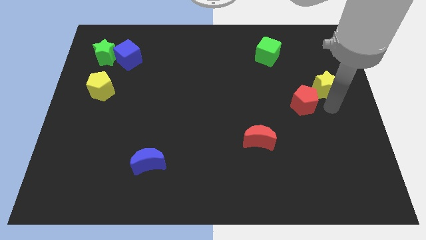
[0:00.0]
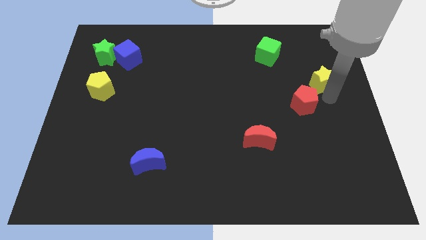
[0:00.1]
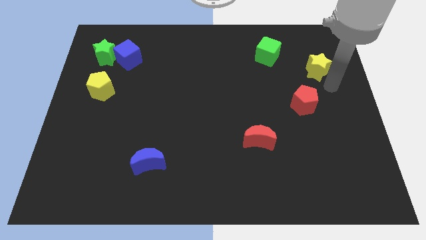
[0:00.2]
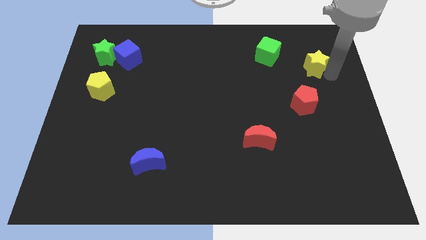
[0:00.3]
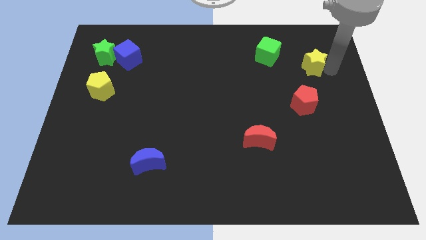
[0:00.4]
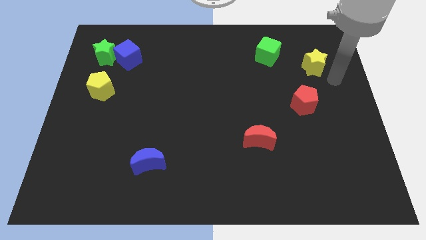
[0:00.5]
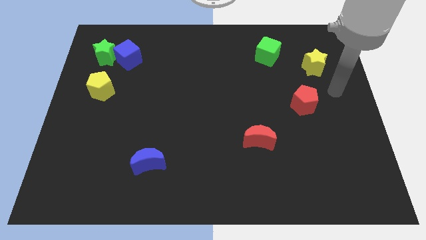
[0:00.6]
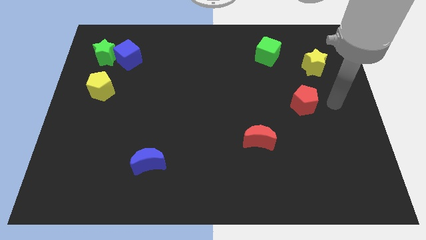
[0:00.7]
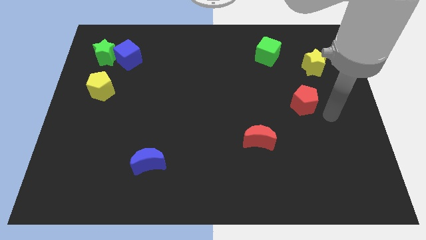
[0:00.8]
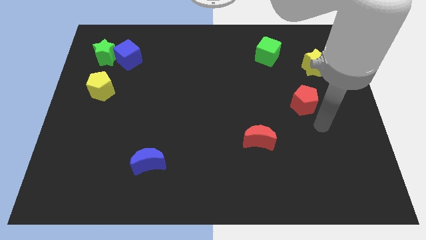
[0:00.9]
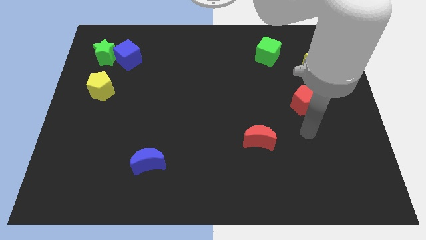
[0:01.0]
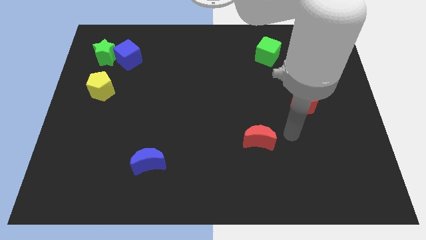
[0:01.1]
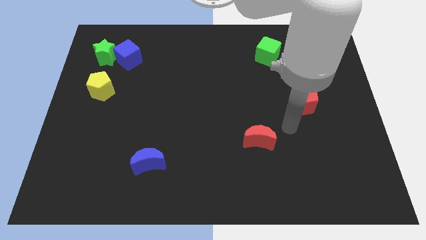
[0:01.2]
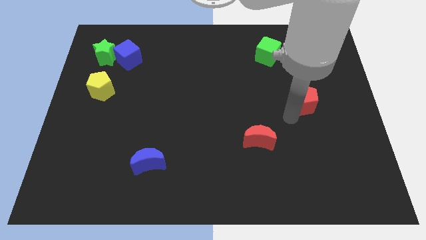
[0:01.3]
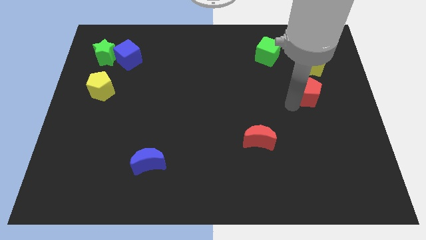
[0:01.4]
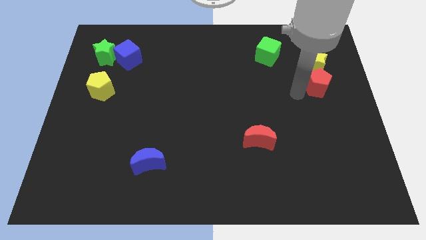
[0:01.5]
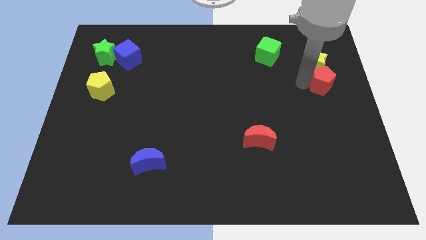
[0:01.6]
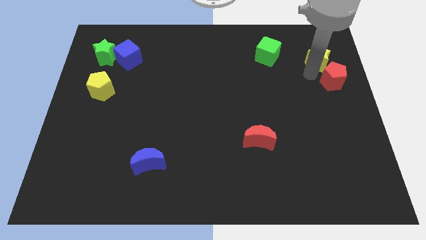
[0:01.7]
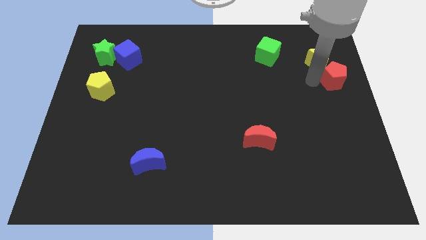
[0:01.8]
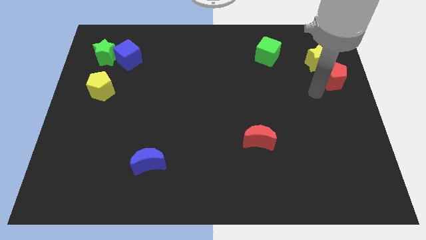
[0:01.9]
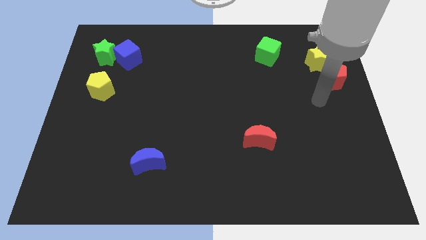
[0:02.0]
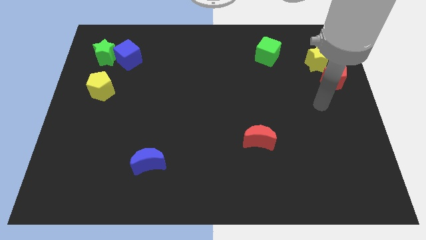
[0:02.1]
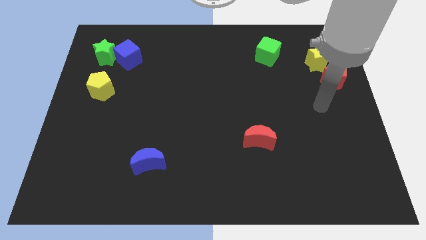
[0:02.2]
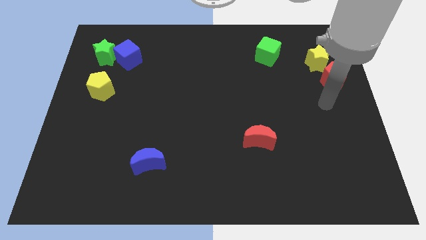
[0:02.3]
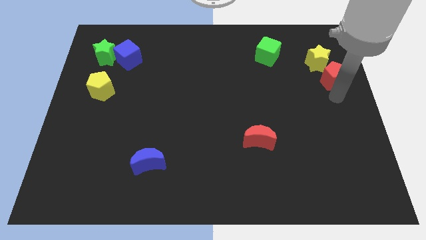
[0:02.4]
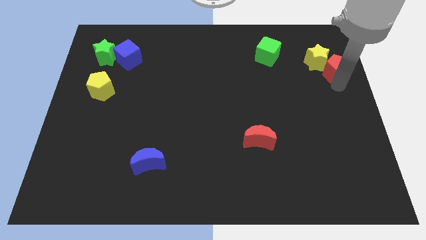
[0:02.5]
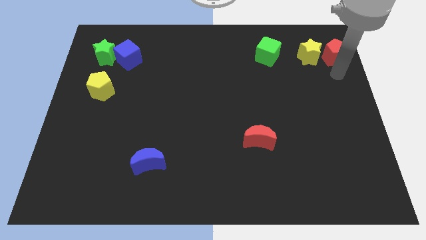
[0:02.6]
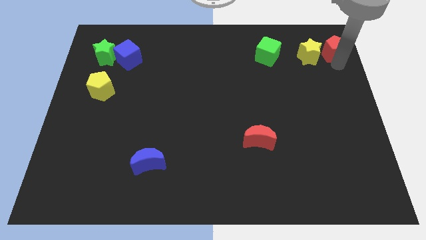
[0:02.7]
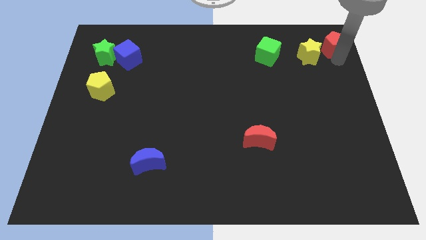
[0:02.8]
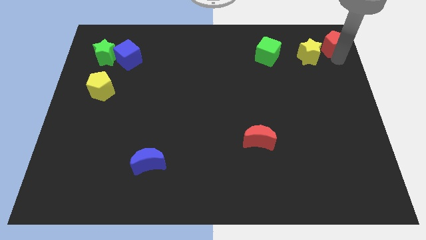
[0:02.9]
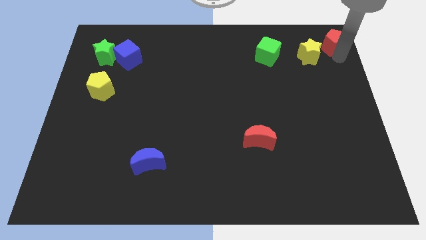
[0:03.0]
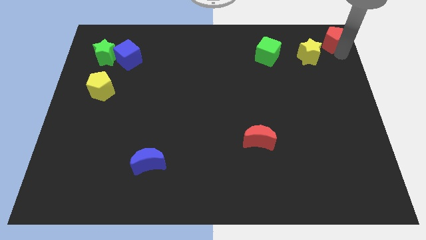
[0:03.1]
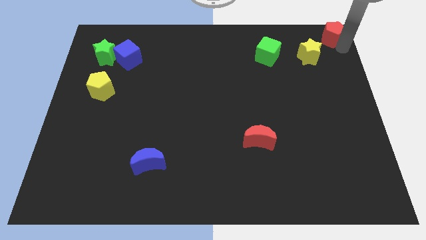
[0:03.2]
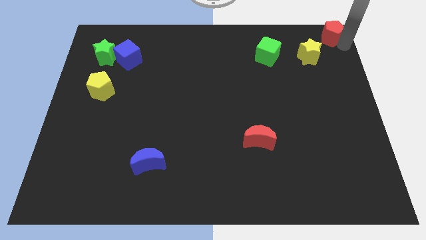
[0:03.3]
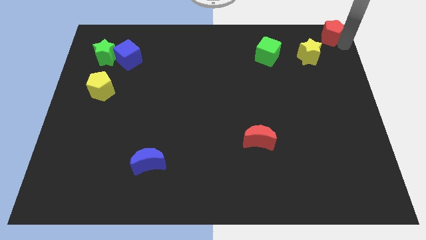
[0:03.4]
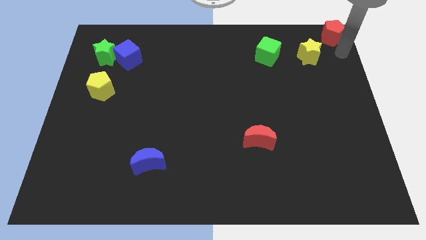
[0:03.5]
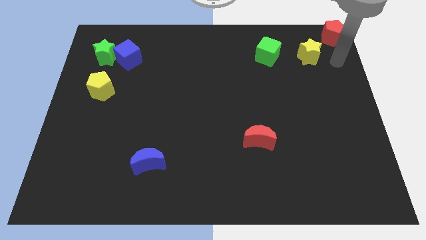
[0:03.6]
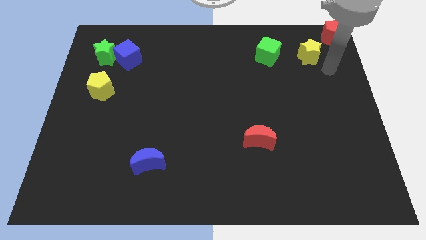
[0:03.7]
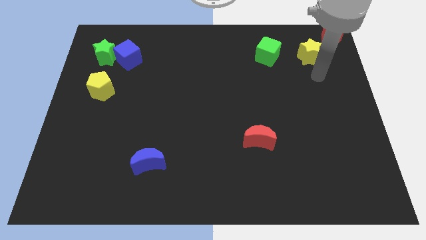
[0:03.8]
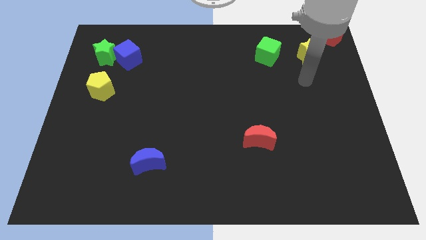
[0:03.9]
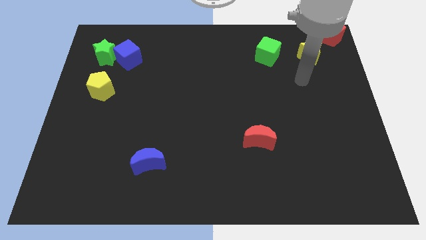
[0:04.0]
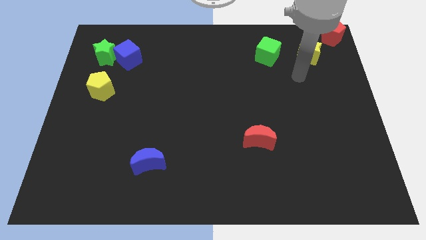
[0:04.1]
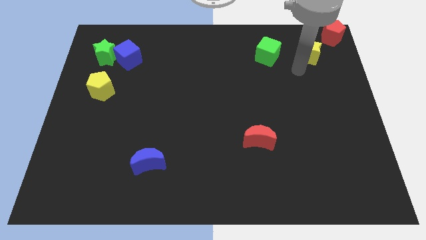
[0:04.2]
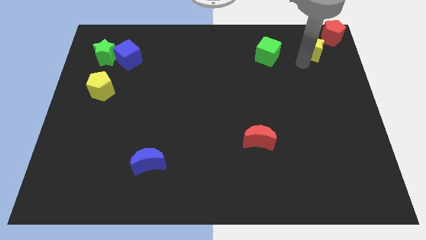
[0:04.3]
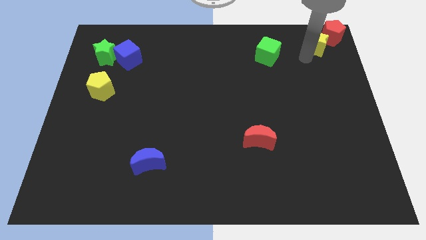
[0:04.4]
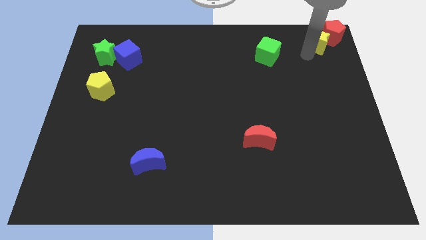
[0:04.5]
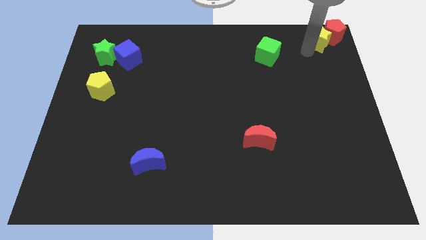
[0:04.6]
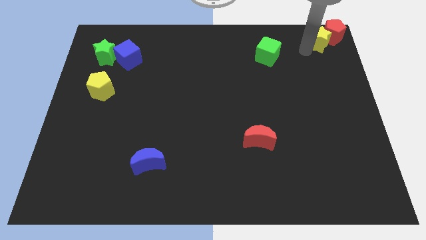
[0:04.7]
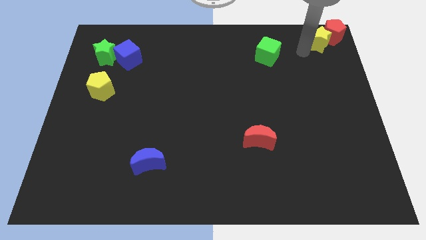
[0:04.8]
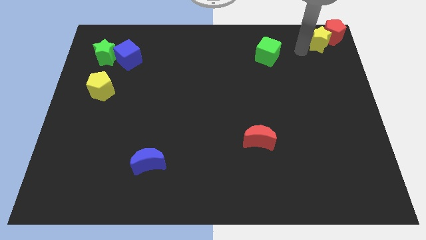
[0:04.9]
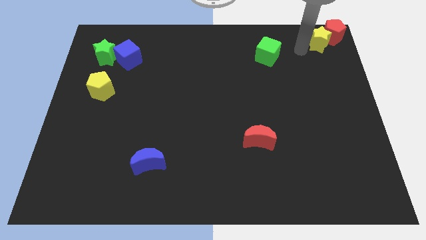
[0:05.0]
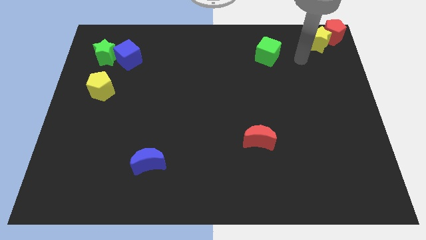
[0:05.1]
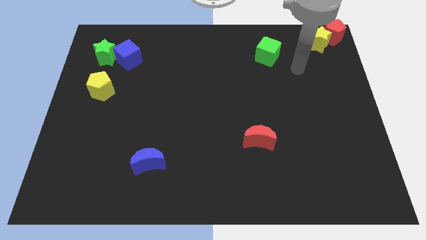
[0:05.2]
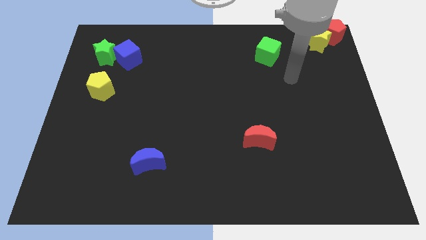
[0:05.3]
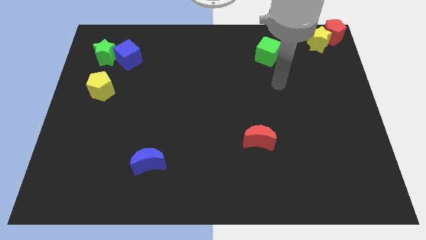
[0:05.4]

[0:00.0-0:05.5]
move the yellow star and red pentagon to the top right corner of the board

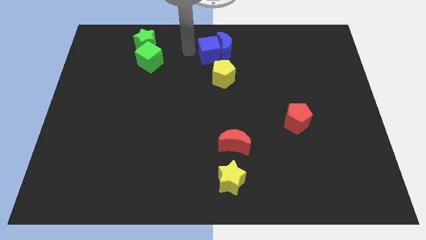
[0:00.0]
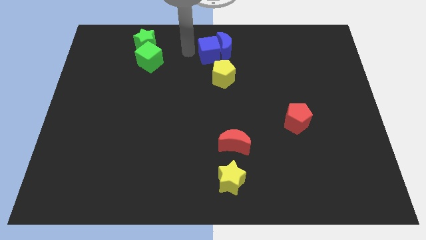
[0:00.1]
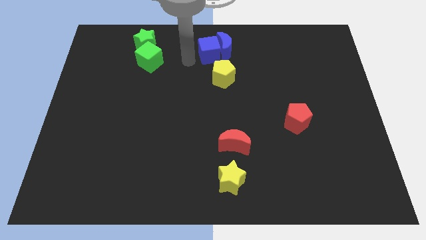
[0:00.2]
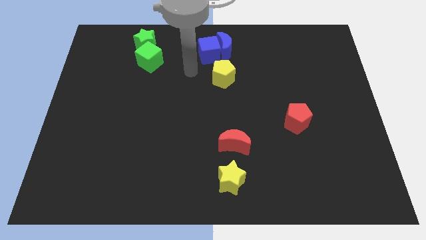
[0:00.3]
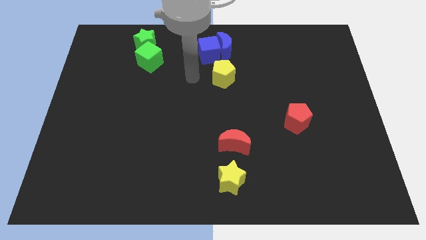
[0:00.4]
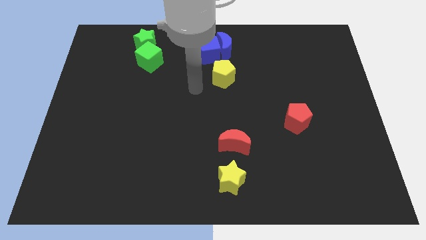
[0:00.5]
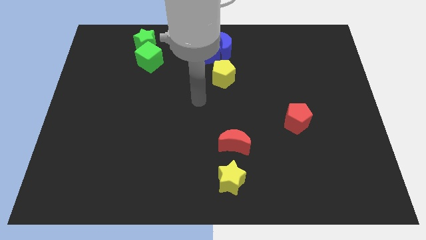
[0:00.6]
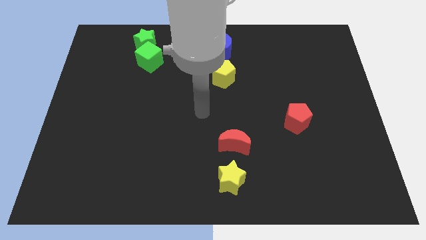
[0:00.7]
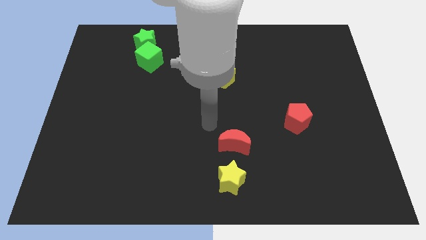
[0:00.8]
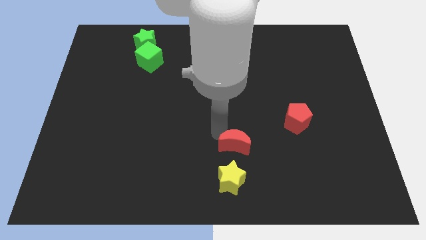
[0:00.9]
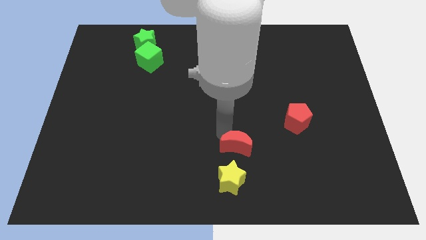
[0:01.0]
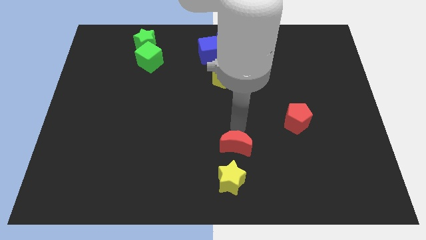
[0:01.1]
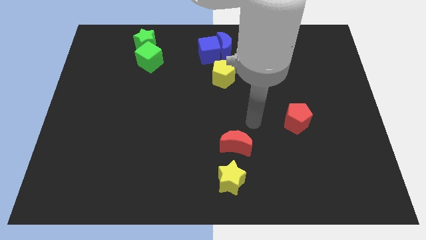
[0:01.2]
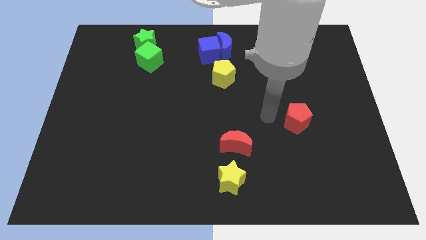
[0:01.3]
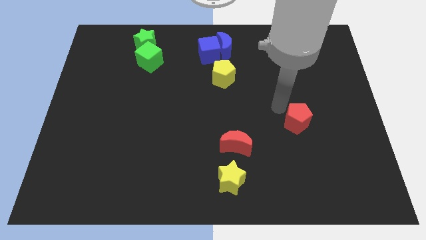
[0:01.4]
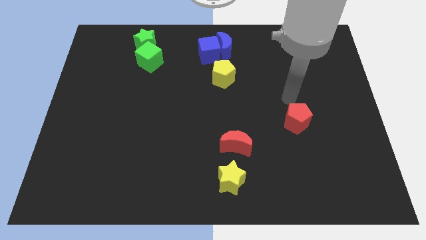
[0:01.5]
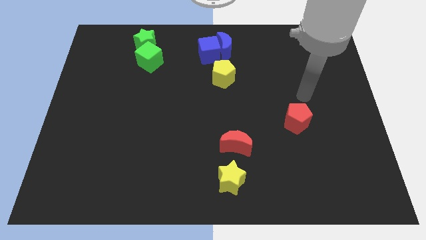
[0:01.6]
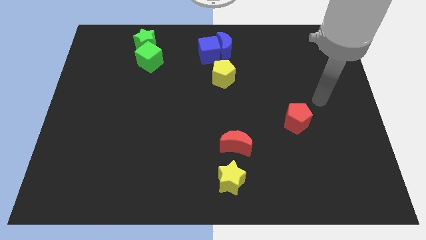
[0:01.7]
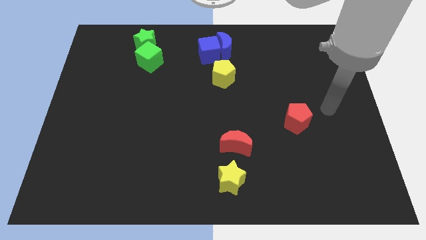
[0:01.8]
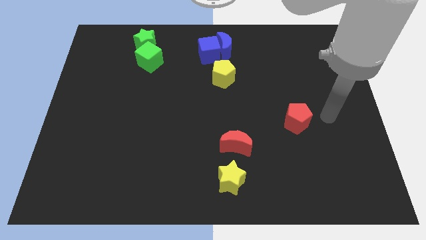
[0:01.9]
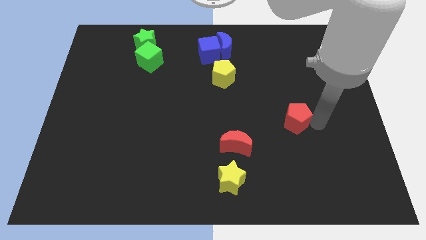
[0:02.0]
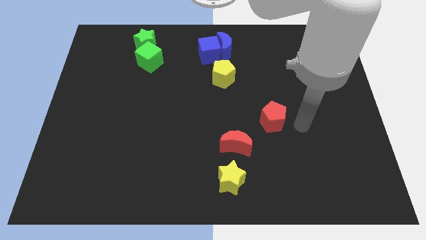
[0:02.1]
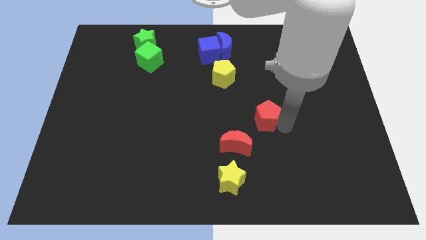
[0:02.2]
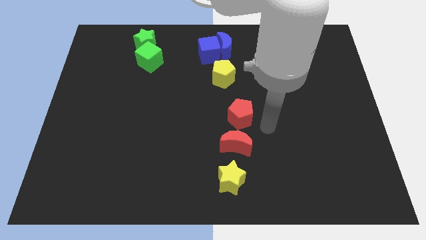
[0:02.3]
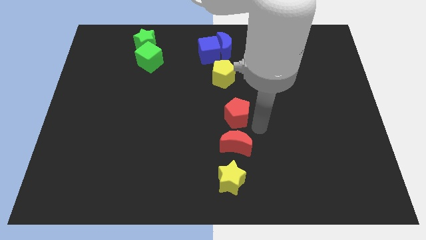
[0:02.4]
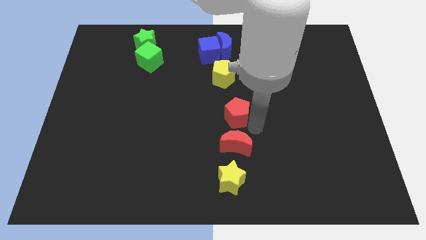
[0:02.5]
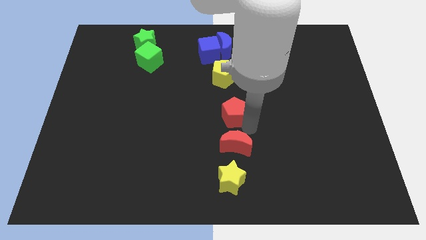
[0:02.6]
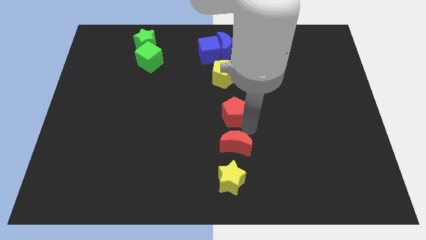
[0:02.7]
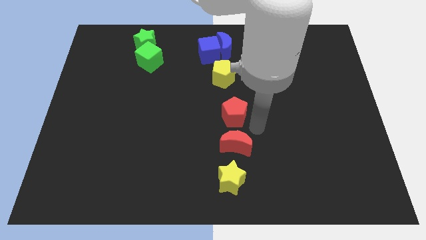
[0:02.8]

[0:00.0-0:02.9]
slide the red pentagon to the center of the board

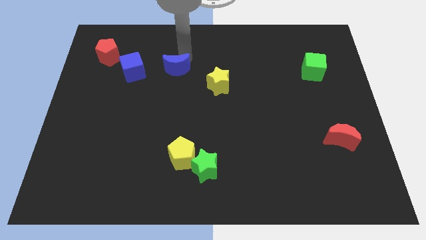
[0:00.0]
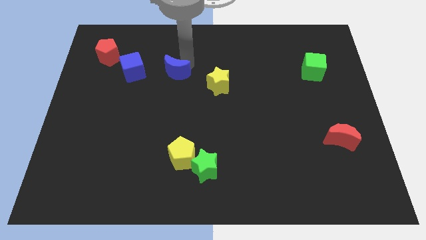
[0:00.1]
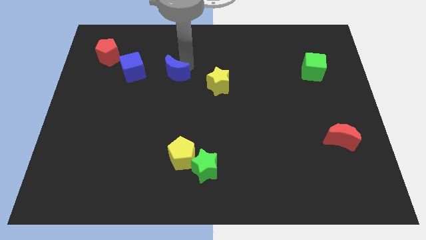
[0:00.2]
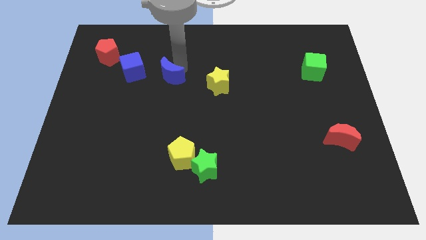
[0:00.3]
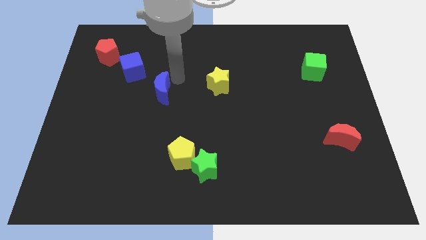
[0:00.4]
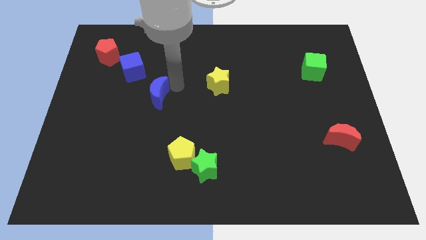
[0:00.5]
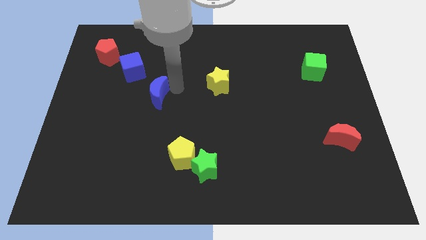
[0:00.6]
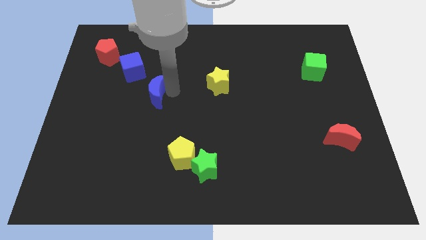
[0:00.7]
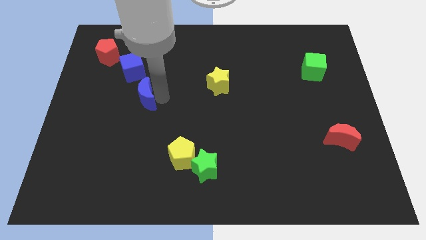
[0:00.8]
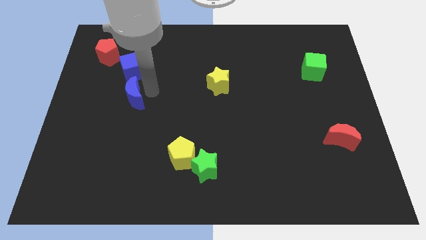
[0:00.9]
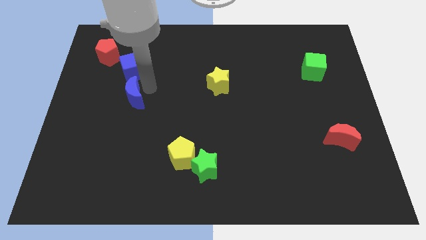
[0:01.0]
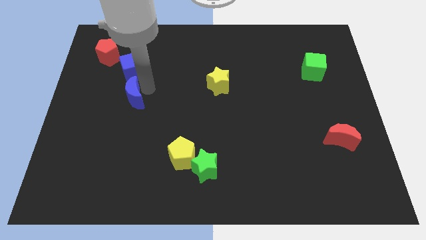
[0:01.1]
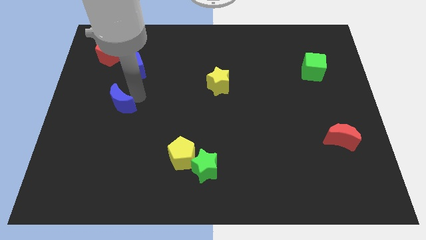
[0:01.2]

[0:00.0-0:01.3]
bring the blue moon at the bottom side of the blue cube
